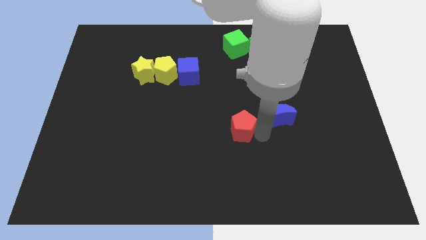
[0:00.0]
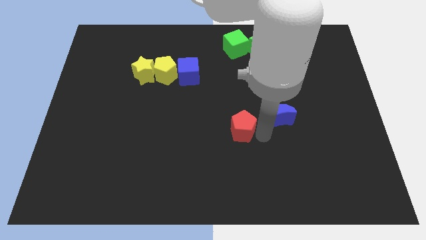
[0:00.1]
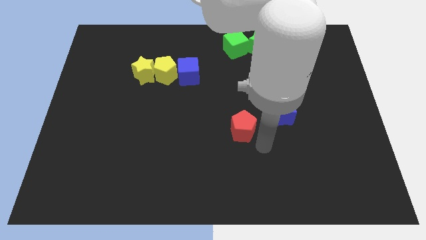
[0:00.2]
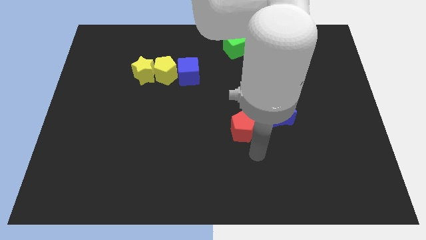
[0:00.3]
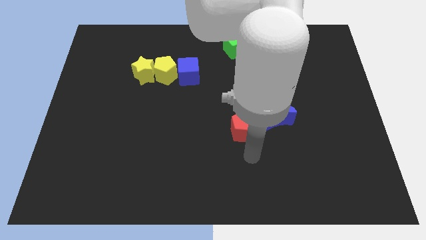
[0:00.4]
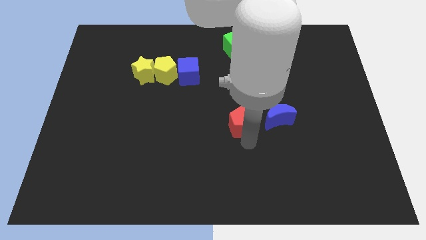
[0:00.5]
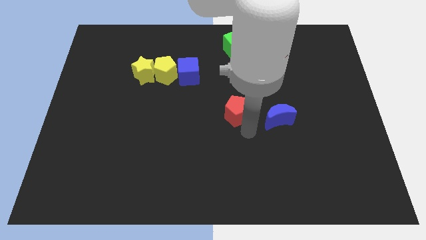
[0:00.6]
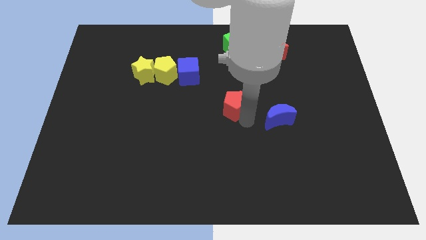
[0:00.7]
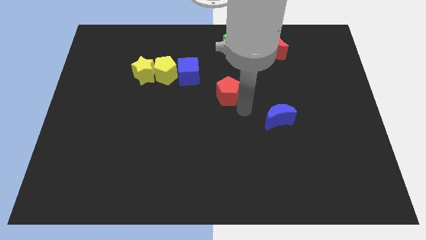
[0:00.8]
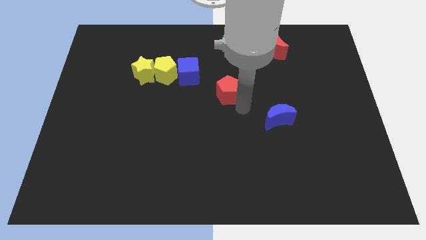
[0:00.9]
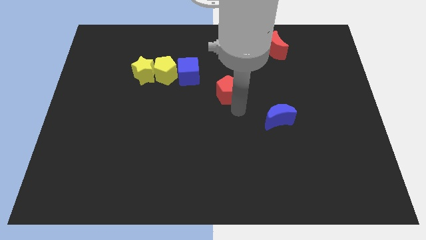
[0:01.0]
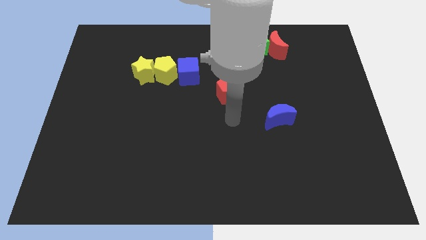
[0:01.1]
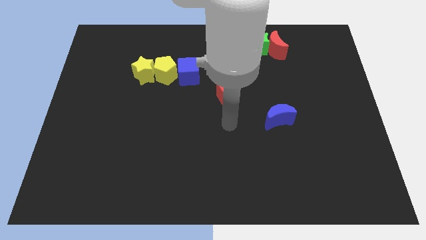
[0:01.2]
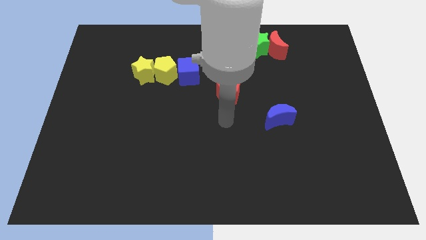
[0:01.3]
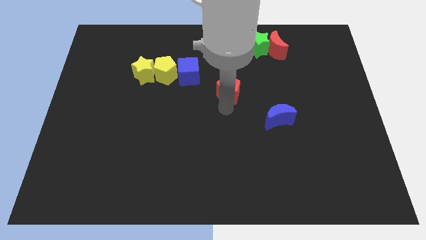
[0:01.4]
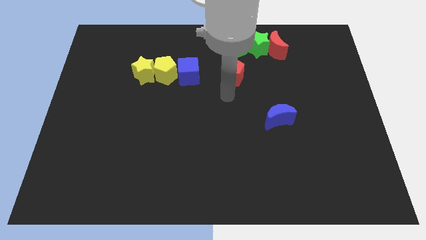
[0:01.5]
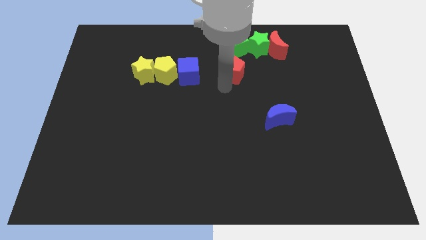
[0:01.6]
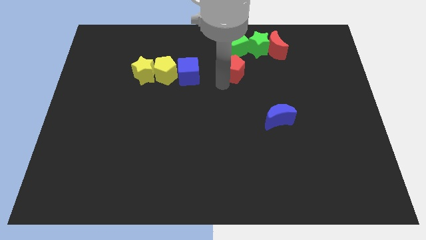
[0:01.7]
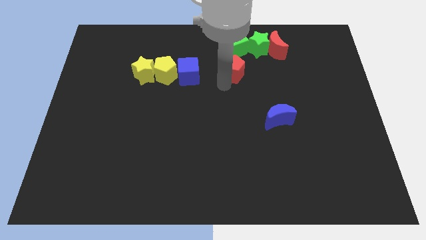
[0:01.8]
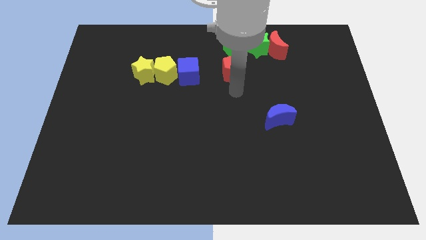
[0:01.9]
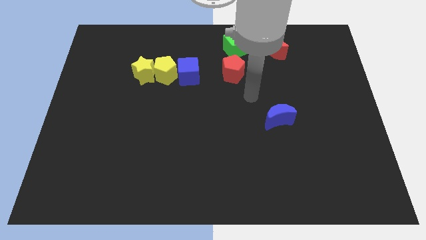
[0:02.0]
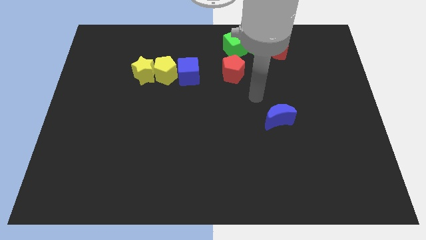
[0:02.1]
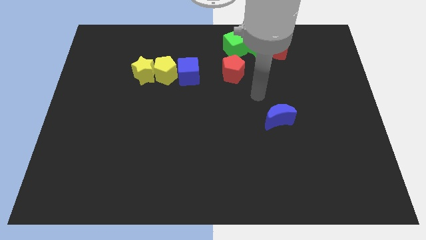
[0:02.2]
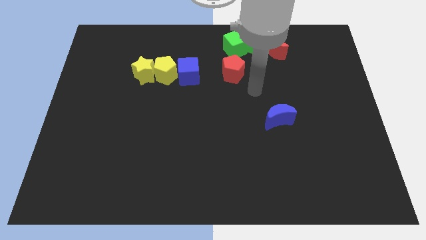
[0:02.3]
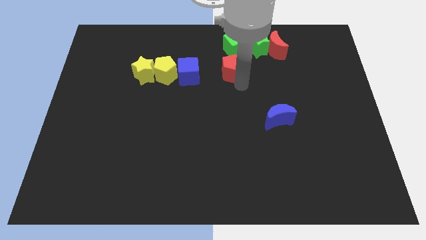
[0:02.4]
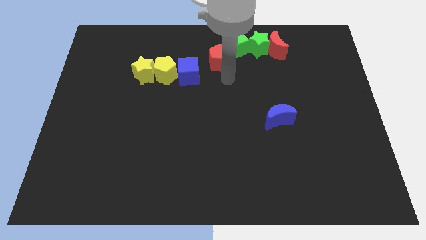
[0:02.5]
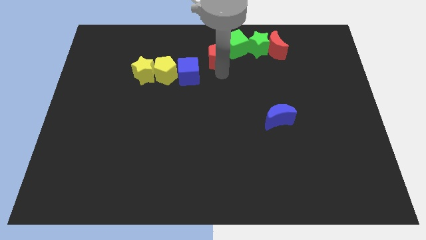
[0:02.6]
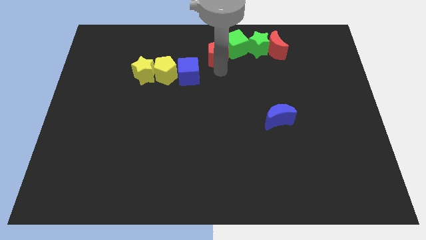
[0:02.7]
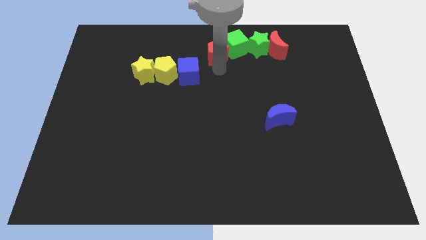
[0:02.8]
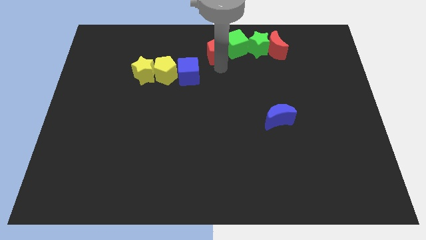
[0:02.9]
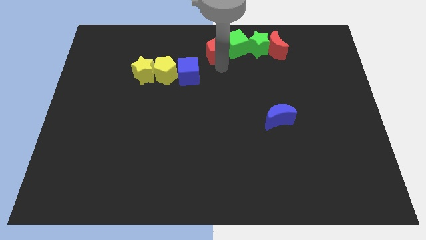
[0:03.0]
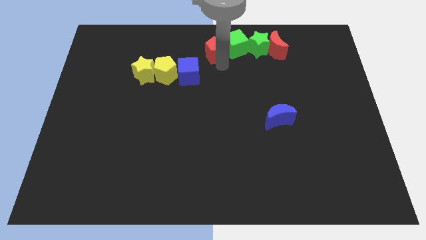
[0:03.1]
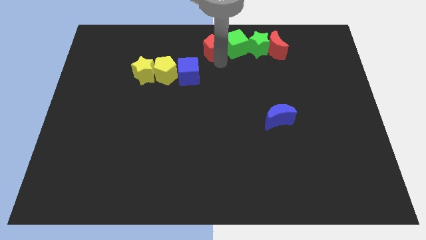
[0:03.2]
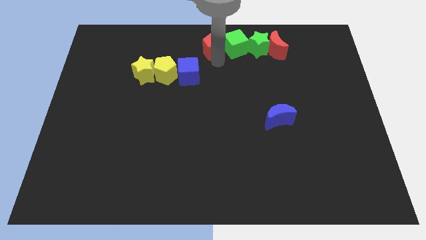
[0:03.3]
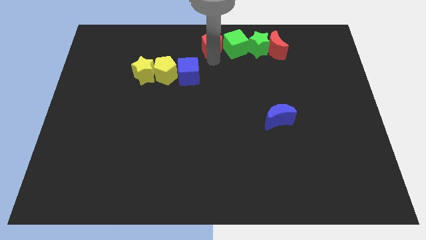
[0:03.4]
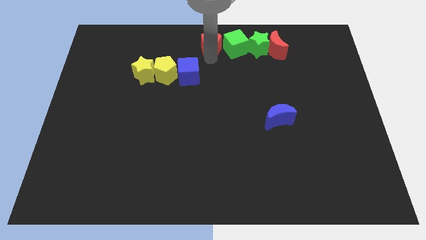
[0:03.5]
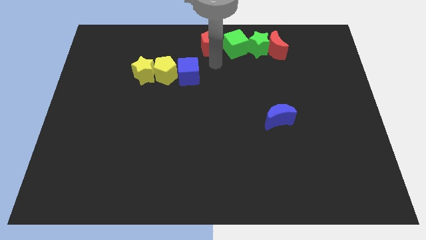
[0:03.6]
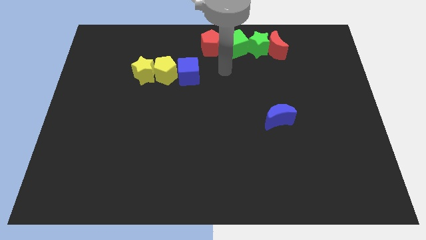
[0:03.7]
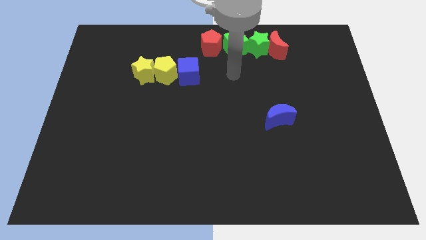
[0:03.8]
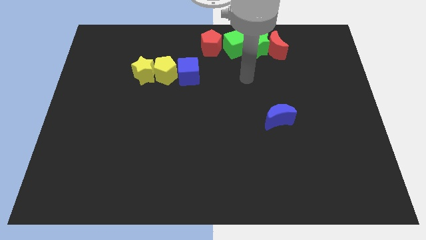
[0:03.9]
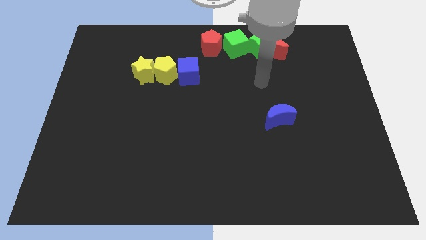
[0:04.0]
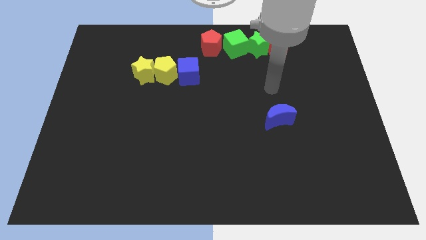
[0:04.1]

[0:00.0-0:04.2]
push the red pentagon to the left of the green cube to the top center of the board

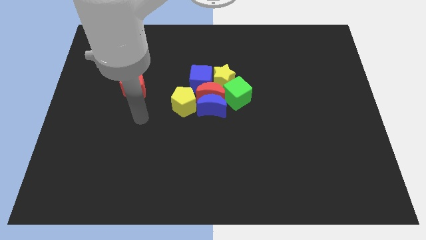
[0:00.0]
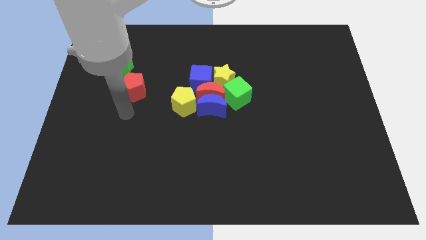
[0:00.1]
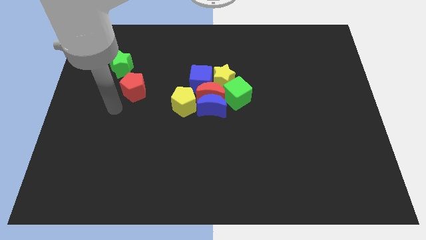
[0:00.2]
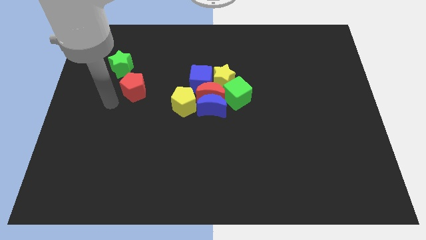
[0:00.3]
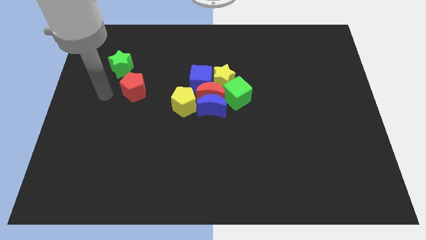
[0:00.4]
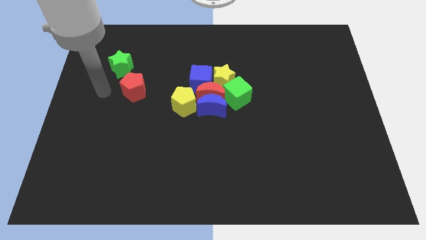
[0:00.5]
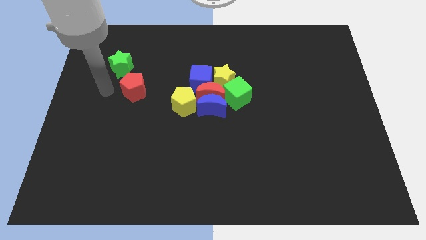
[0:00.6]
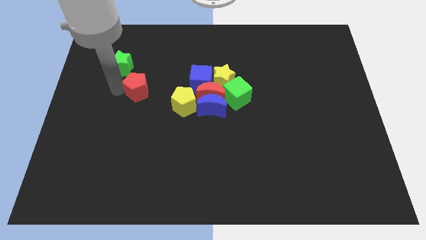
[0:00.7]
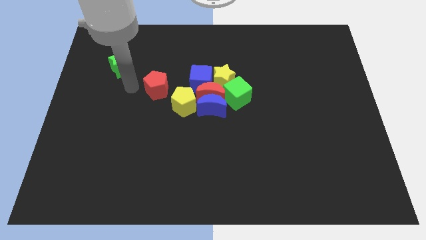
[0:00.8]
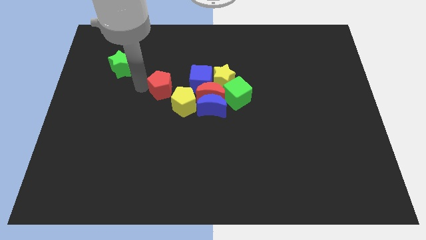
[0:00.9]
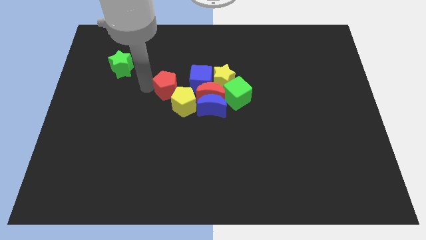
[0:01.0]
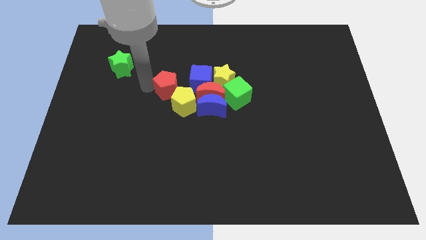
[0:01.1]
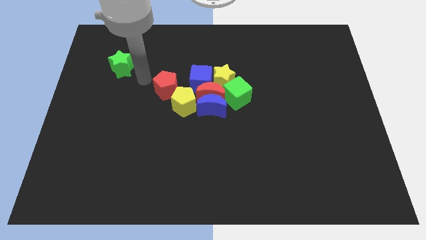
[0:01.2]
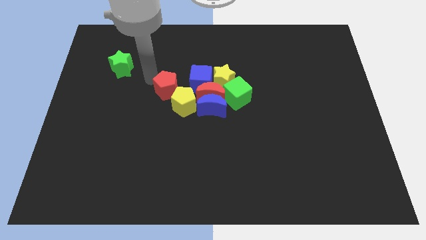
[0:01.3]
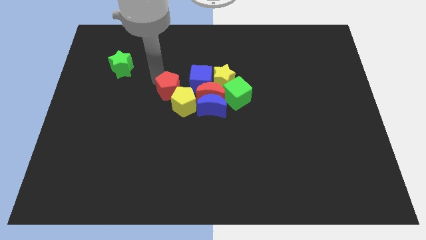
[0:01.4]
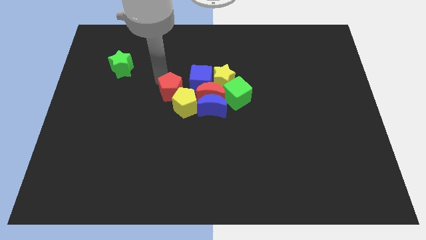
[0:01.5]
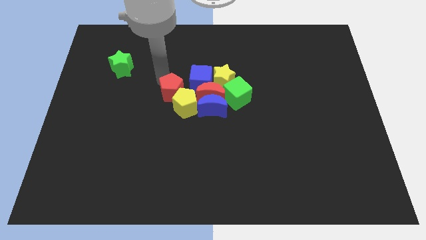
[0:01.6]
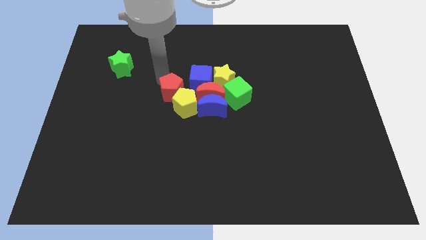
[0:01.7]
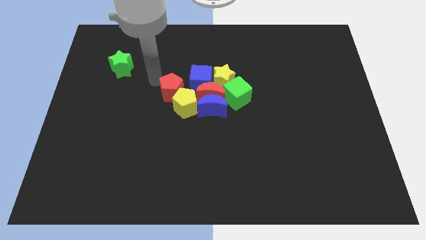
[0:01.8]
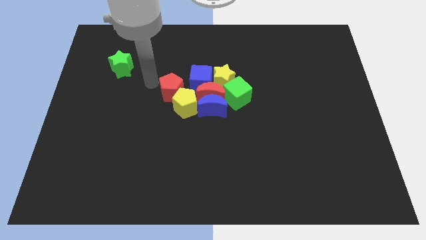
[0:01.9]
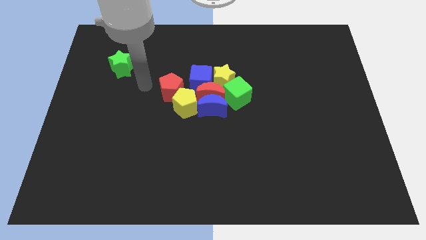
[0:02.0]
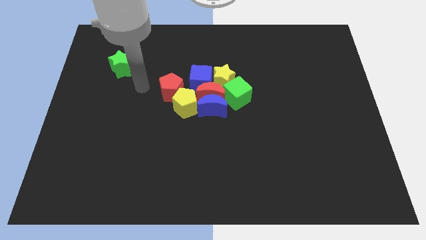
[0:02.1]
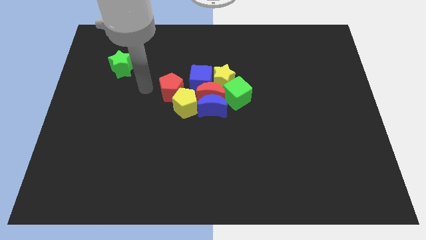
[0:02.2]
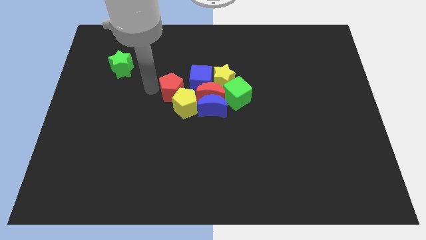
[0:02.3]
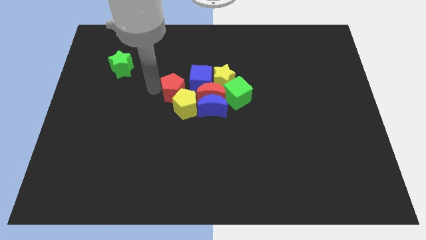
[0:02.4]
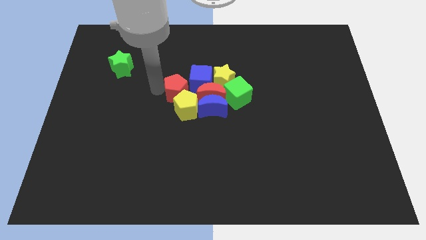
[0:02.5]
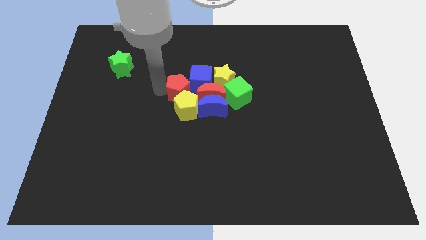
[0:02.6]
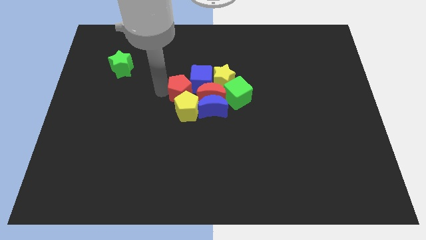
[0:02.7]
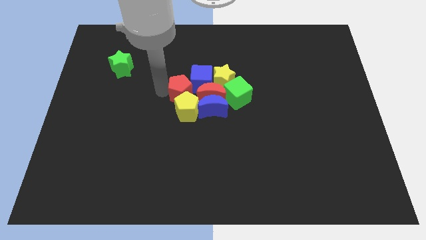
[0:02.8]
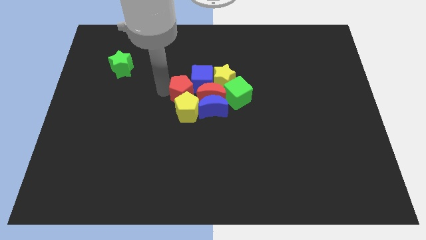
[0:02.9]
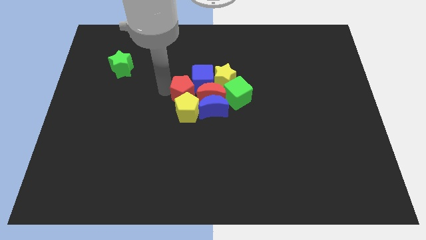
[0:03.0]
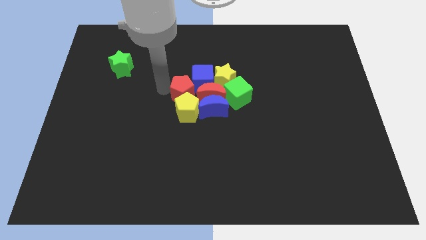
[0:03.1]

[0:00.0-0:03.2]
move red pentagon to the top of yellow pentagon

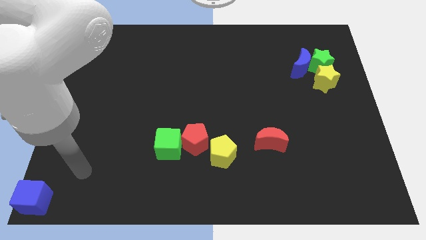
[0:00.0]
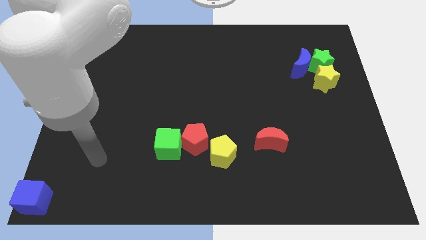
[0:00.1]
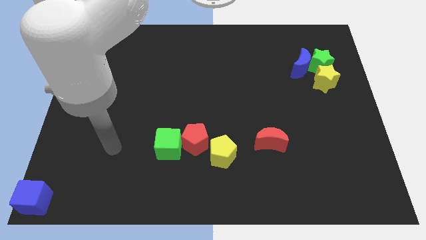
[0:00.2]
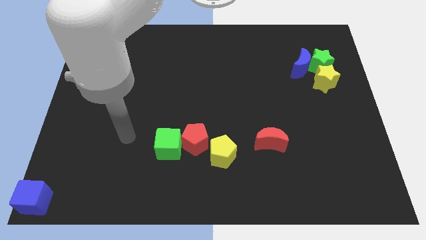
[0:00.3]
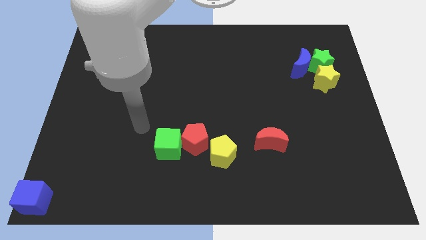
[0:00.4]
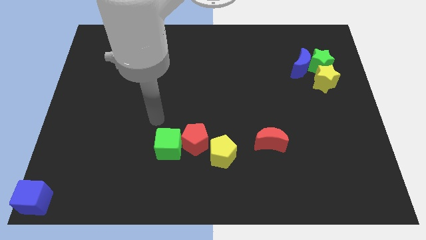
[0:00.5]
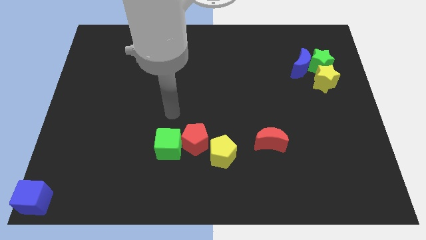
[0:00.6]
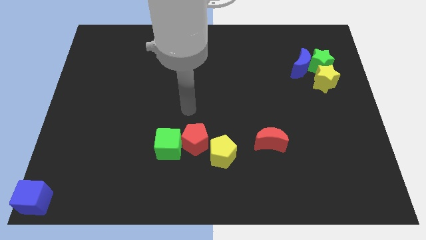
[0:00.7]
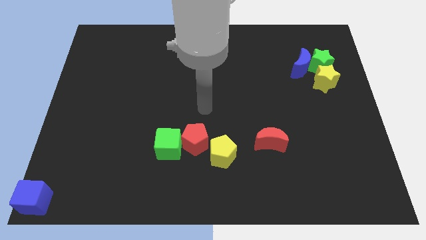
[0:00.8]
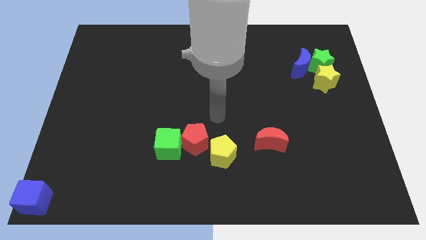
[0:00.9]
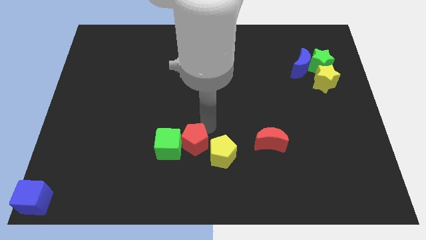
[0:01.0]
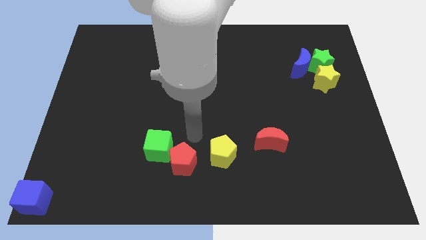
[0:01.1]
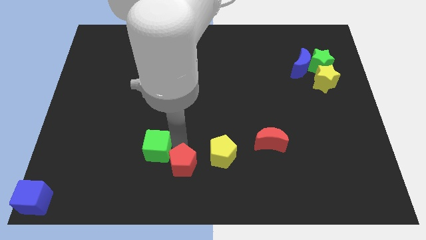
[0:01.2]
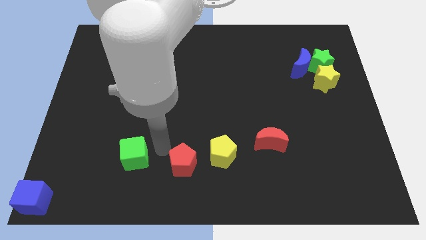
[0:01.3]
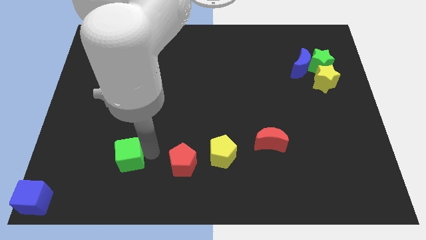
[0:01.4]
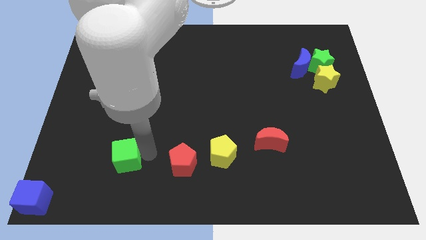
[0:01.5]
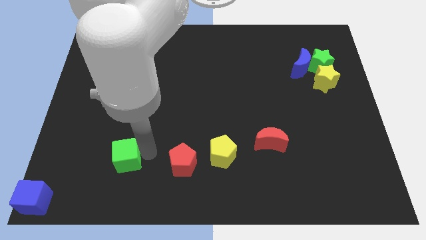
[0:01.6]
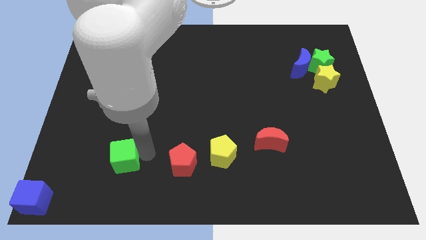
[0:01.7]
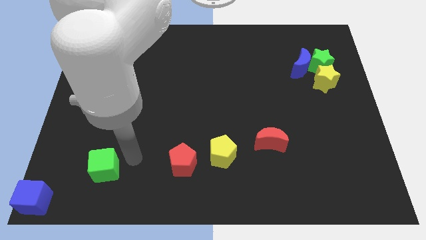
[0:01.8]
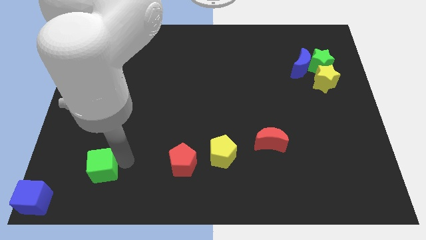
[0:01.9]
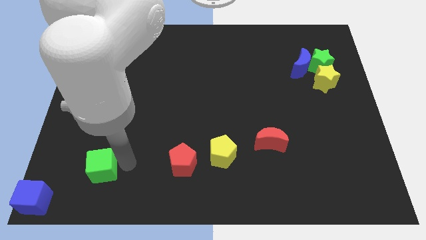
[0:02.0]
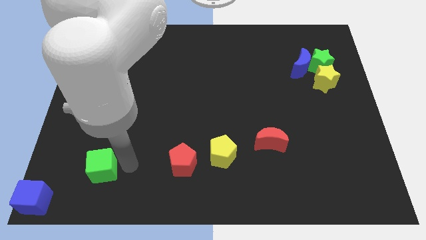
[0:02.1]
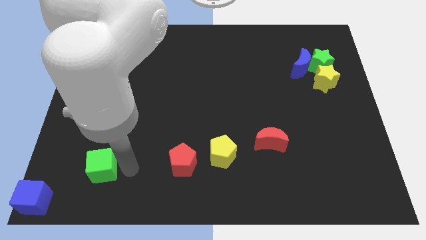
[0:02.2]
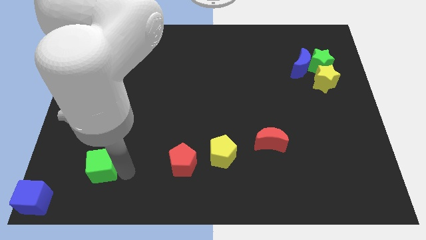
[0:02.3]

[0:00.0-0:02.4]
separate the green cube from the red pentgaon
